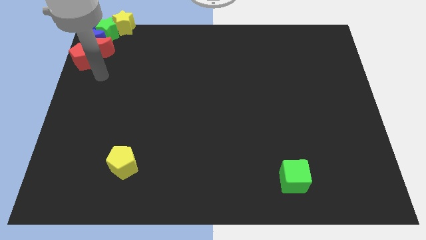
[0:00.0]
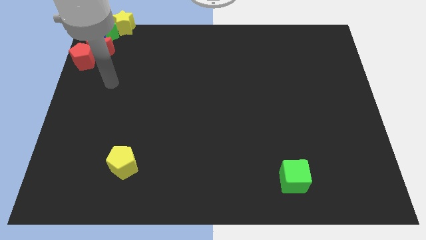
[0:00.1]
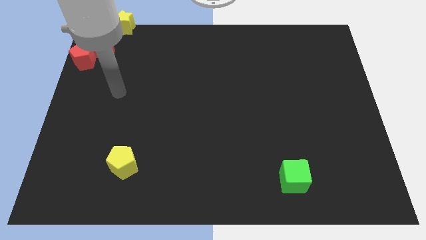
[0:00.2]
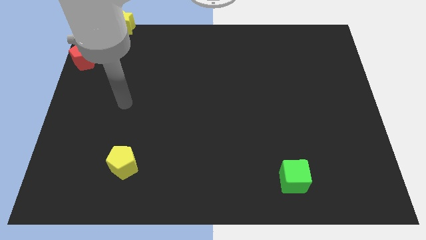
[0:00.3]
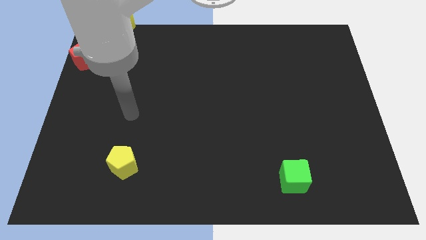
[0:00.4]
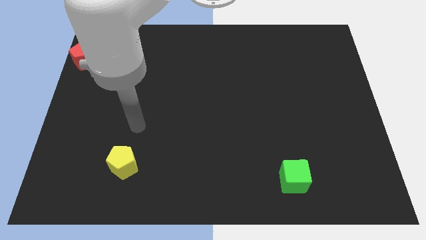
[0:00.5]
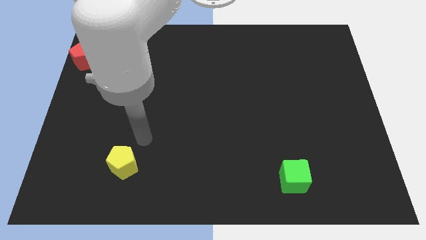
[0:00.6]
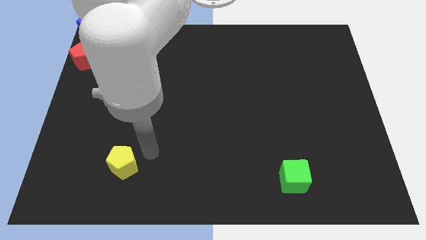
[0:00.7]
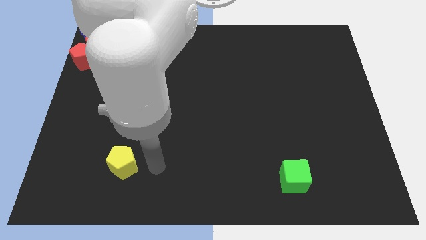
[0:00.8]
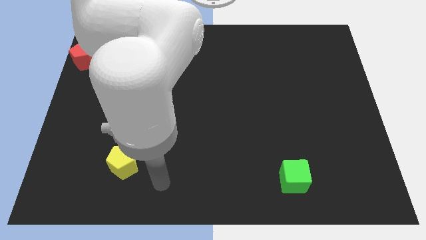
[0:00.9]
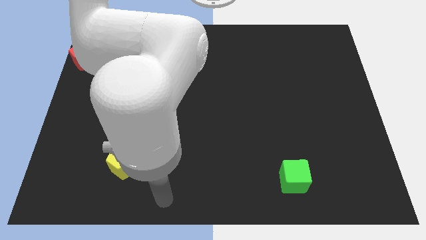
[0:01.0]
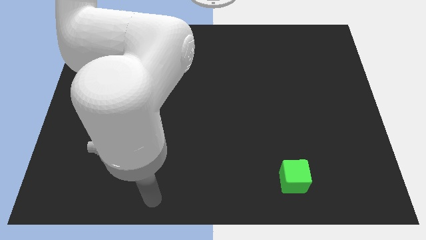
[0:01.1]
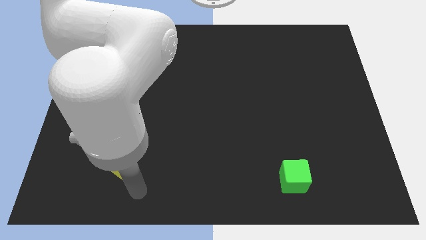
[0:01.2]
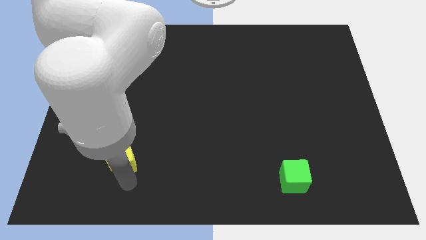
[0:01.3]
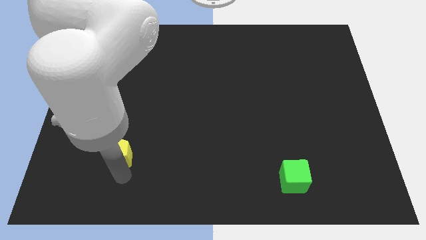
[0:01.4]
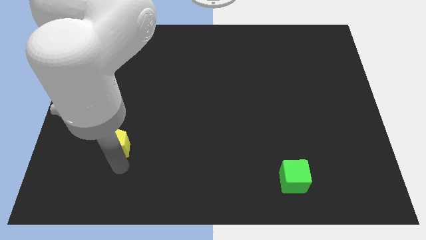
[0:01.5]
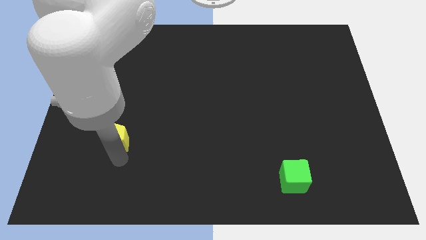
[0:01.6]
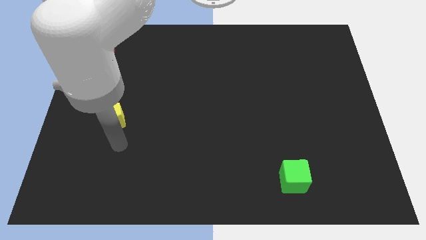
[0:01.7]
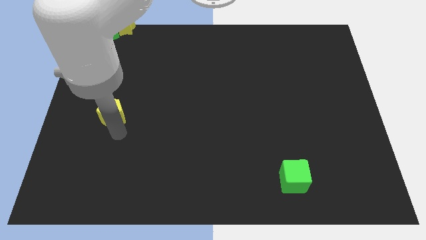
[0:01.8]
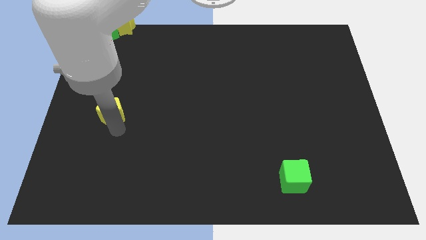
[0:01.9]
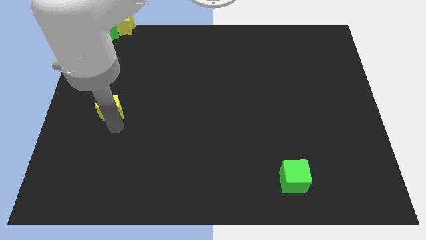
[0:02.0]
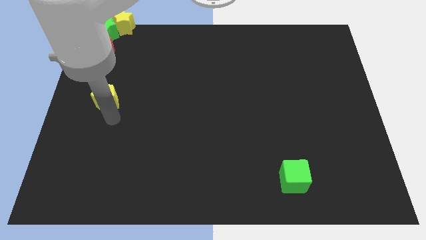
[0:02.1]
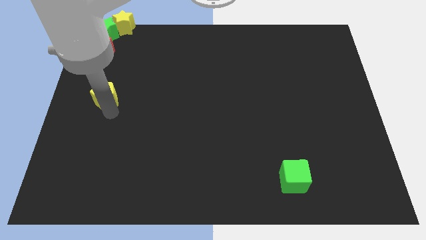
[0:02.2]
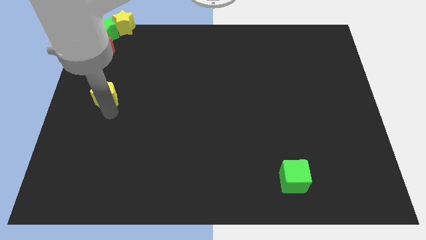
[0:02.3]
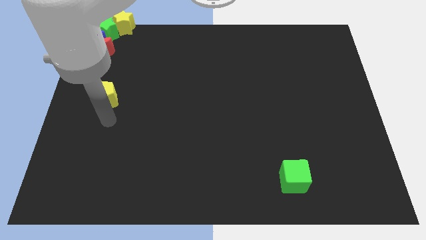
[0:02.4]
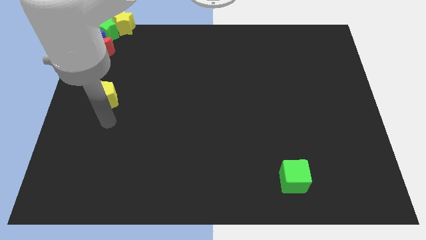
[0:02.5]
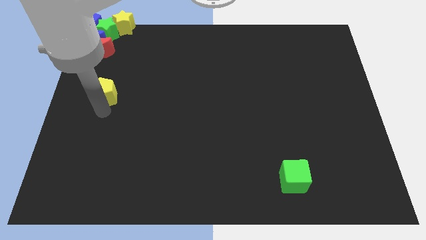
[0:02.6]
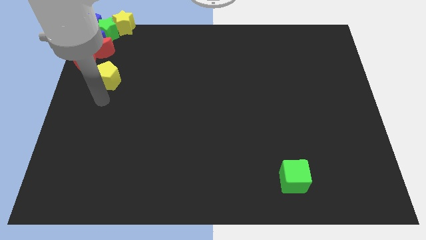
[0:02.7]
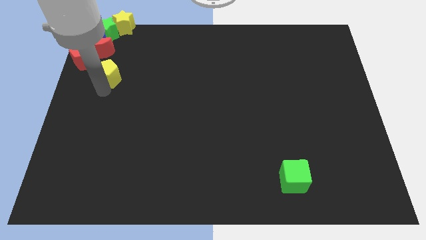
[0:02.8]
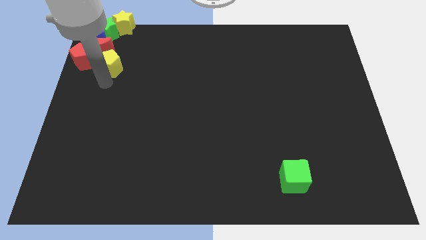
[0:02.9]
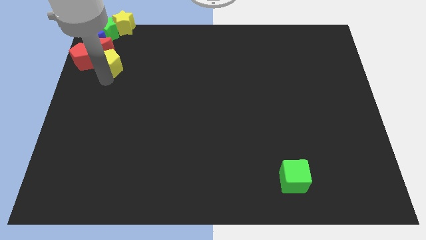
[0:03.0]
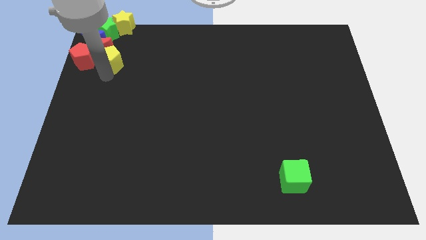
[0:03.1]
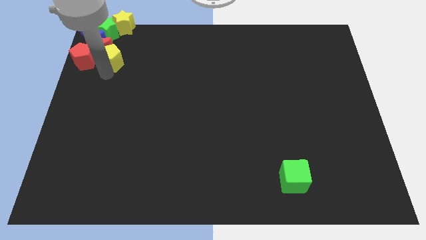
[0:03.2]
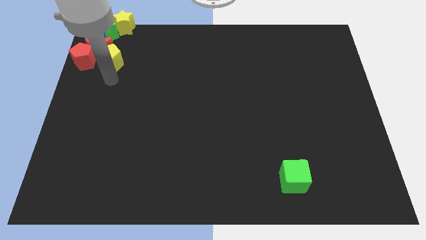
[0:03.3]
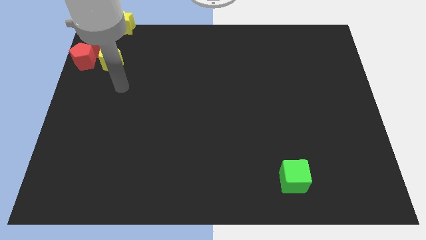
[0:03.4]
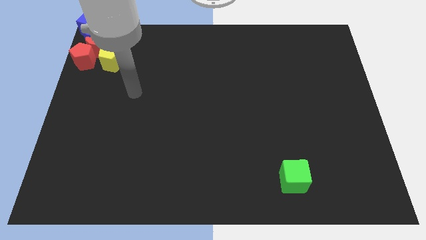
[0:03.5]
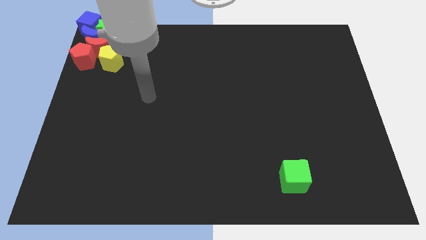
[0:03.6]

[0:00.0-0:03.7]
push the yellow pentagon into the red moon

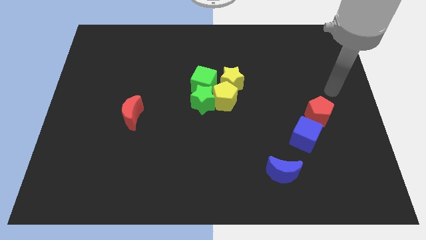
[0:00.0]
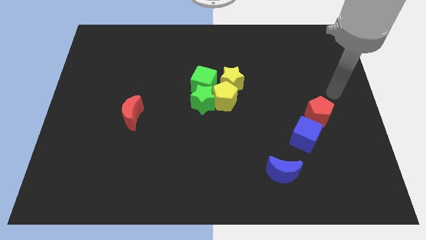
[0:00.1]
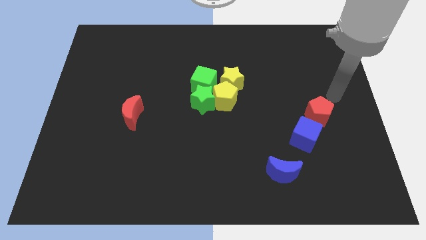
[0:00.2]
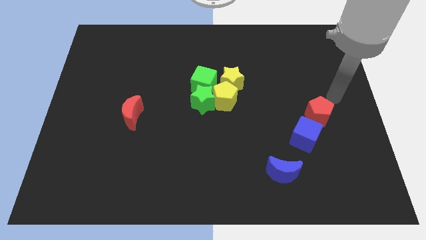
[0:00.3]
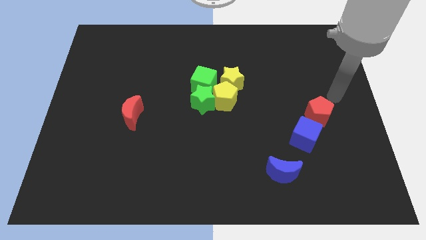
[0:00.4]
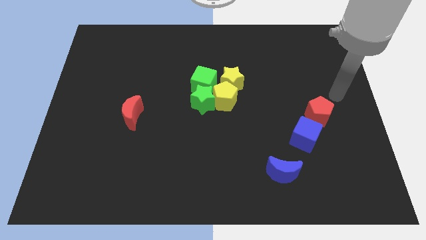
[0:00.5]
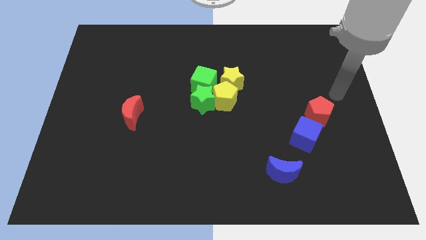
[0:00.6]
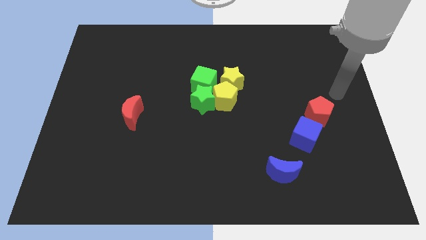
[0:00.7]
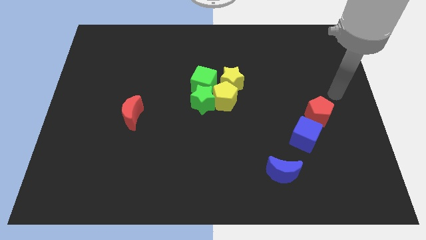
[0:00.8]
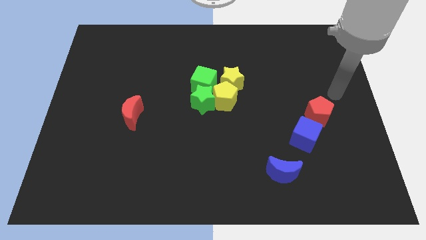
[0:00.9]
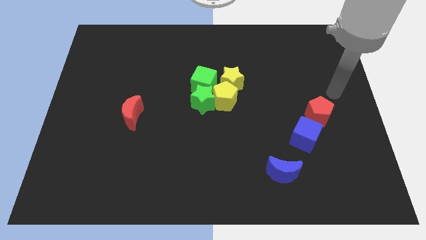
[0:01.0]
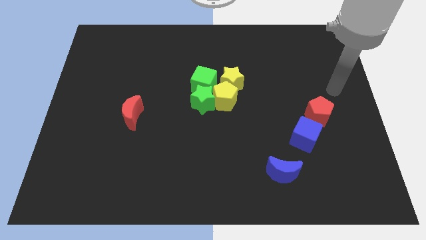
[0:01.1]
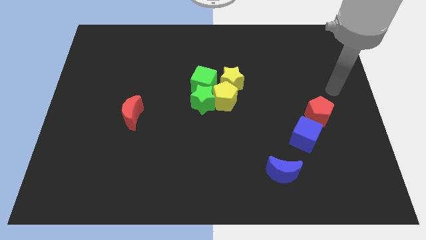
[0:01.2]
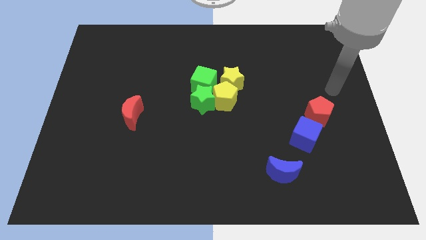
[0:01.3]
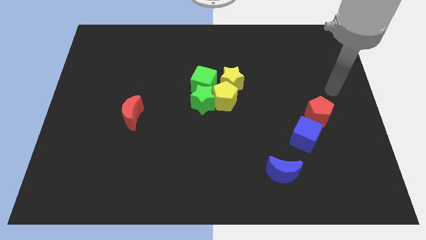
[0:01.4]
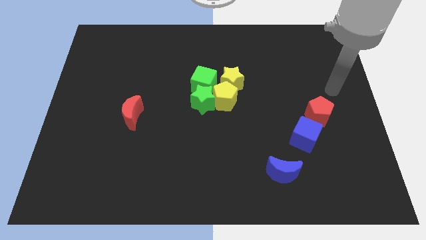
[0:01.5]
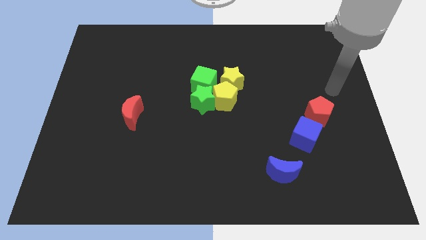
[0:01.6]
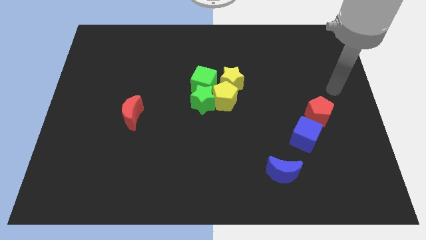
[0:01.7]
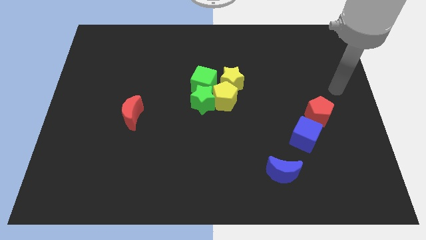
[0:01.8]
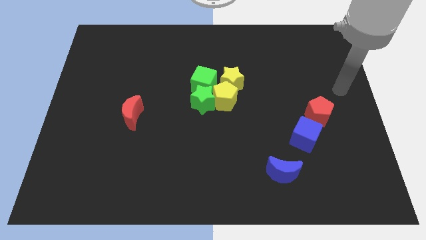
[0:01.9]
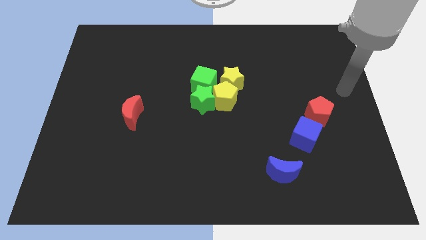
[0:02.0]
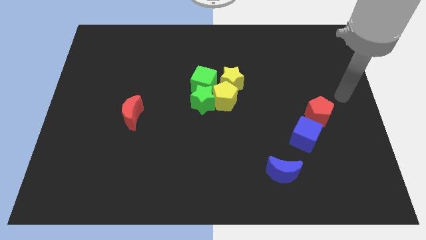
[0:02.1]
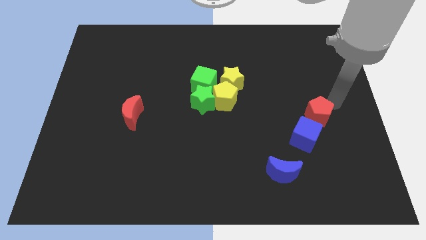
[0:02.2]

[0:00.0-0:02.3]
move your arm diagonal right of red pentagon

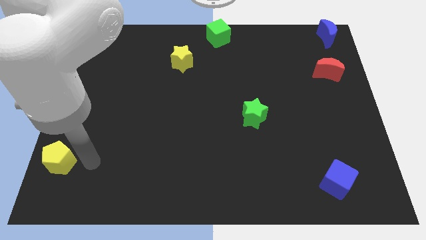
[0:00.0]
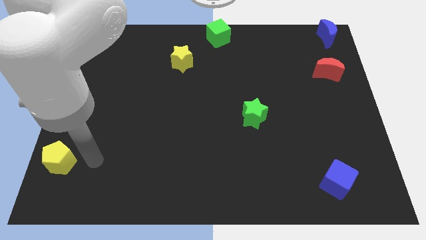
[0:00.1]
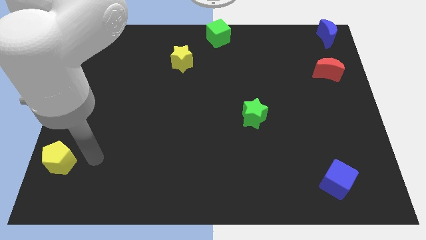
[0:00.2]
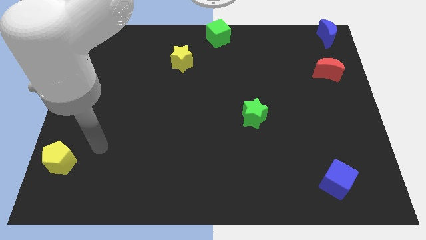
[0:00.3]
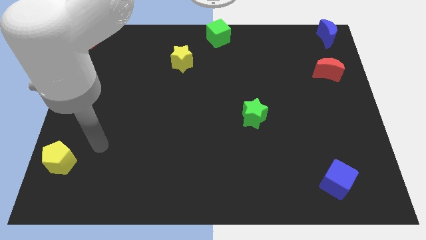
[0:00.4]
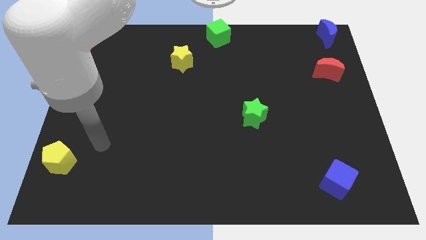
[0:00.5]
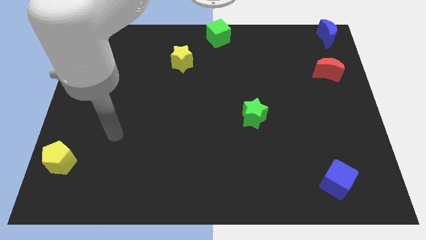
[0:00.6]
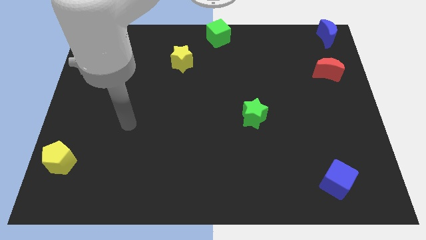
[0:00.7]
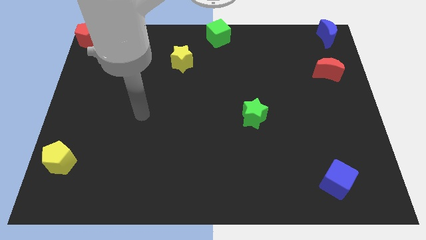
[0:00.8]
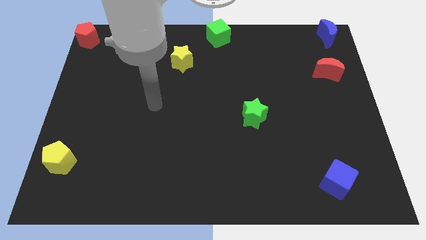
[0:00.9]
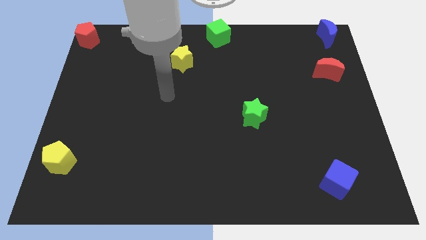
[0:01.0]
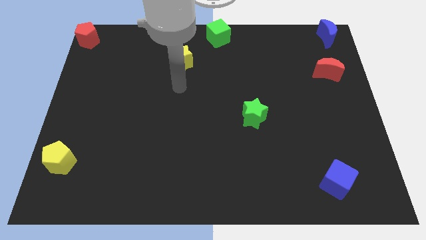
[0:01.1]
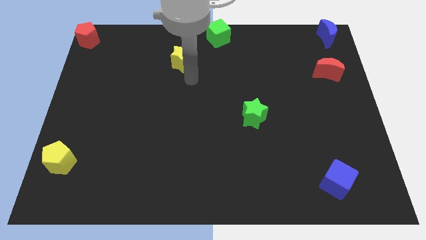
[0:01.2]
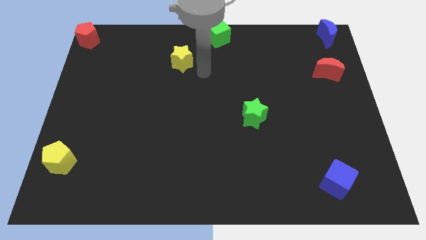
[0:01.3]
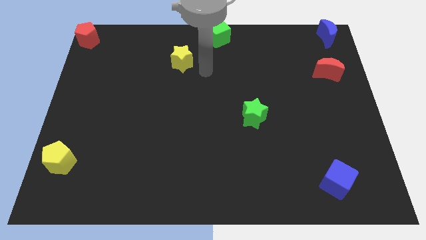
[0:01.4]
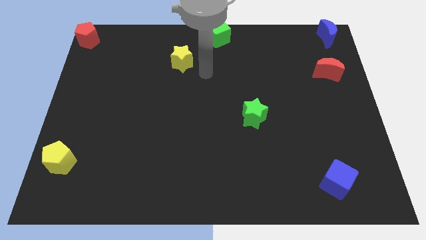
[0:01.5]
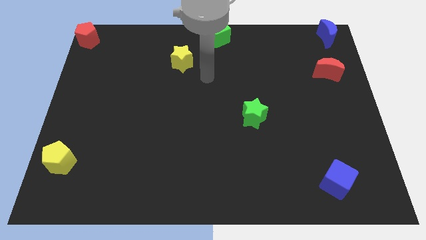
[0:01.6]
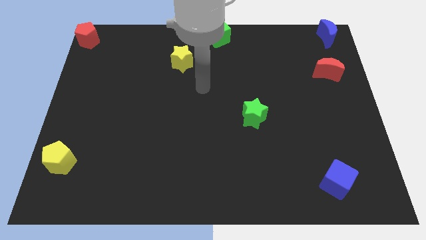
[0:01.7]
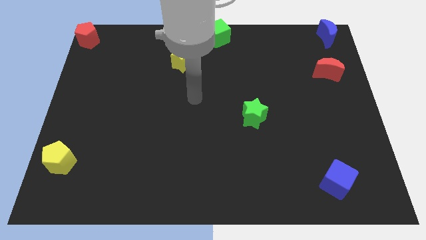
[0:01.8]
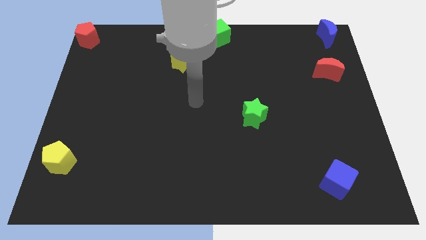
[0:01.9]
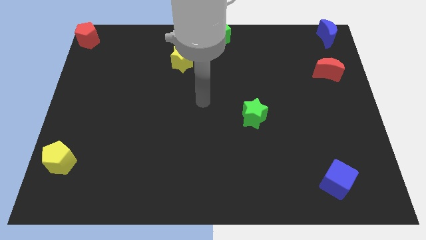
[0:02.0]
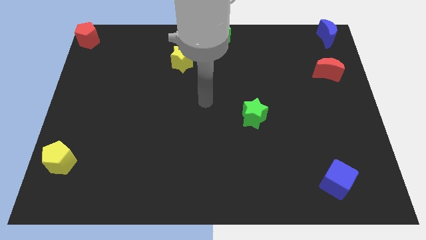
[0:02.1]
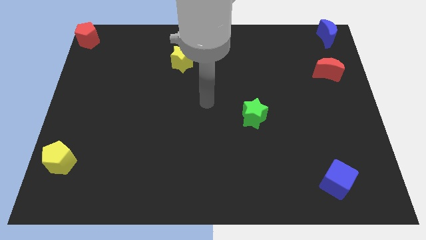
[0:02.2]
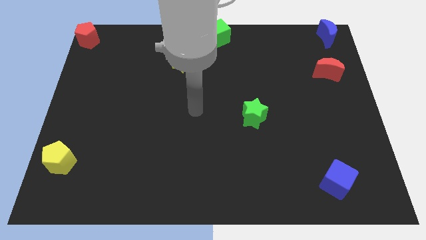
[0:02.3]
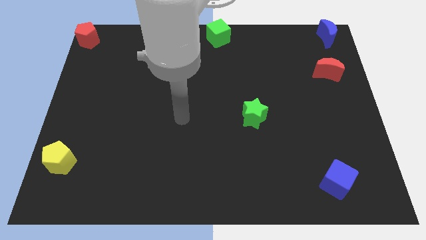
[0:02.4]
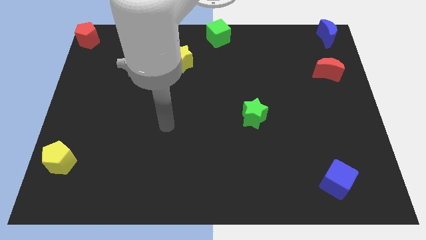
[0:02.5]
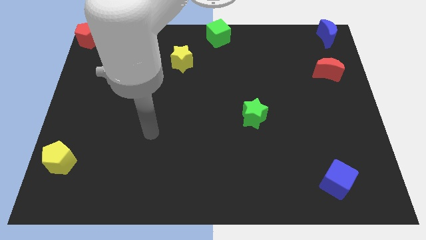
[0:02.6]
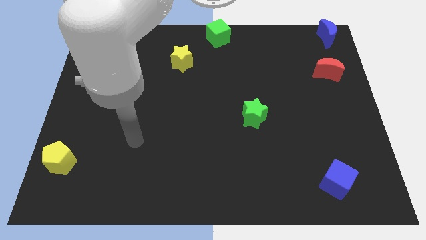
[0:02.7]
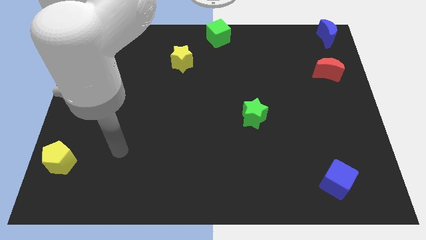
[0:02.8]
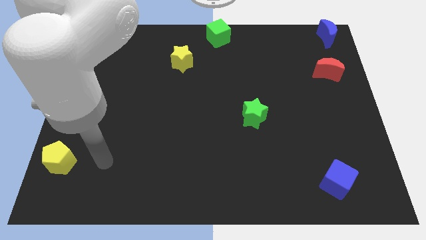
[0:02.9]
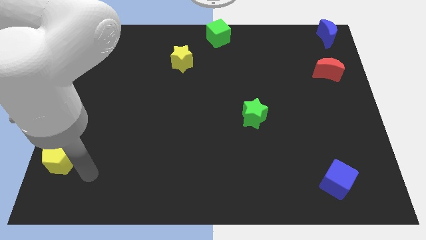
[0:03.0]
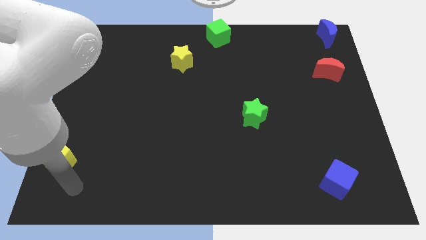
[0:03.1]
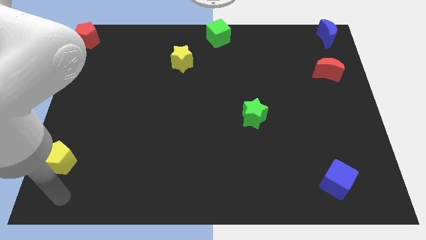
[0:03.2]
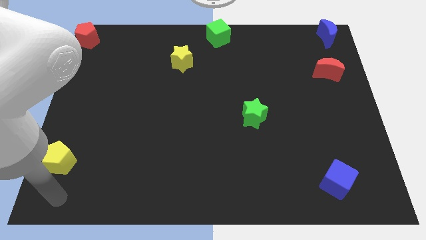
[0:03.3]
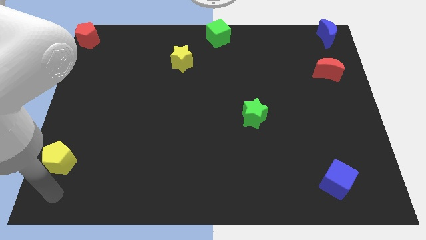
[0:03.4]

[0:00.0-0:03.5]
go to the bottom side of the yellow pentagon
